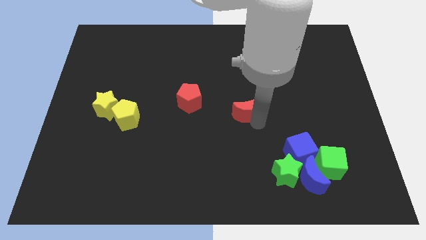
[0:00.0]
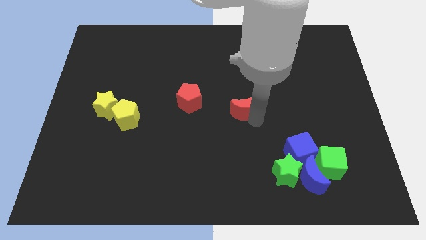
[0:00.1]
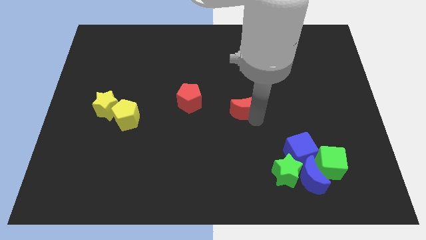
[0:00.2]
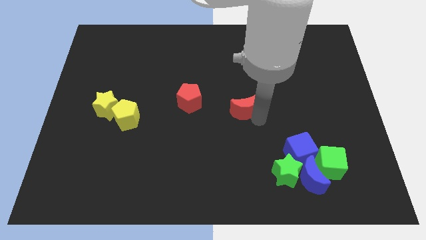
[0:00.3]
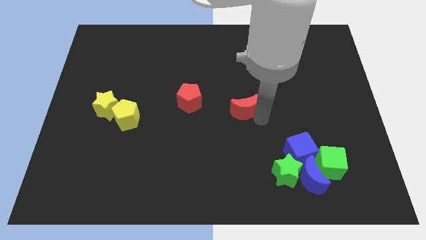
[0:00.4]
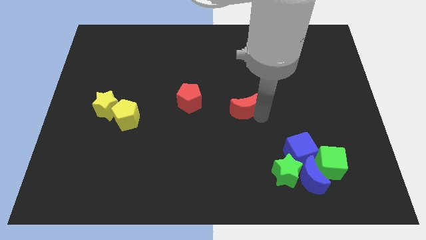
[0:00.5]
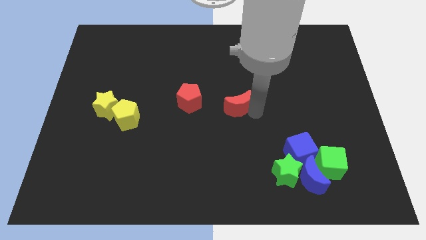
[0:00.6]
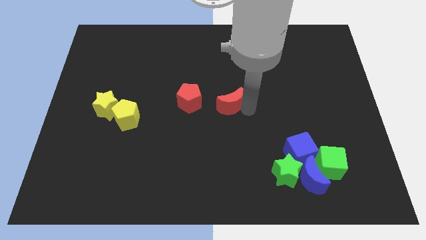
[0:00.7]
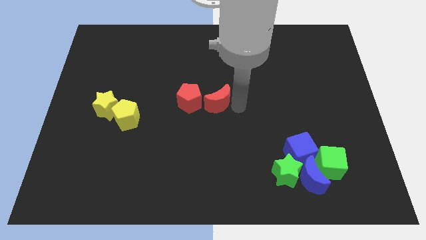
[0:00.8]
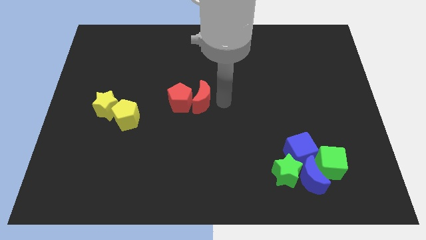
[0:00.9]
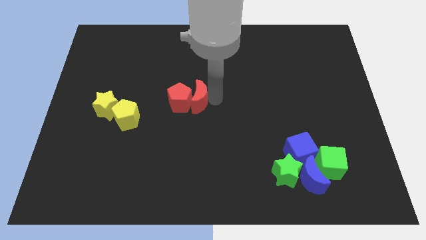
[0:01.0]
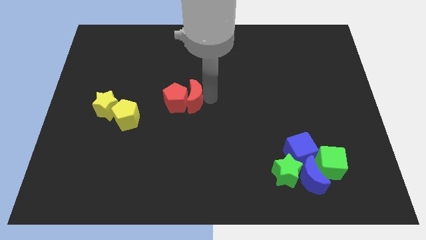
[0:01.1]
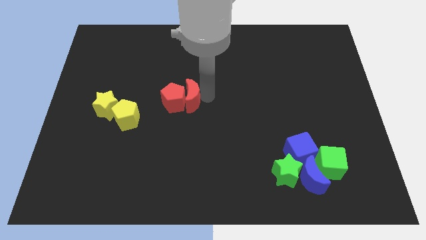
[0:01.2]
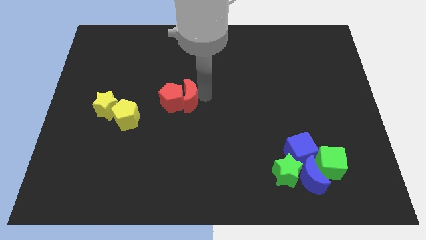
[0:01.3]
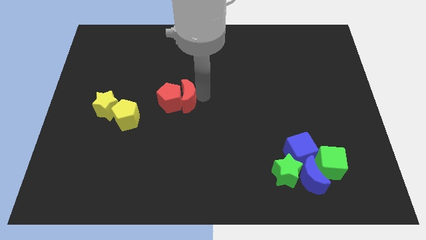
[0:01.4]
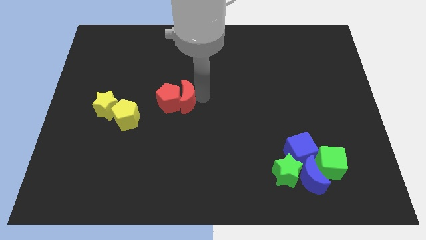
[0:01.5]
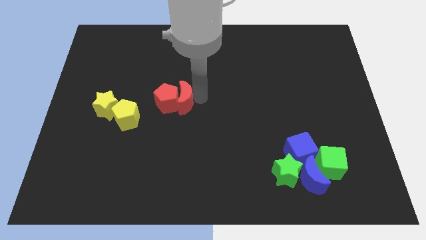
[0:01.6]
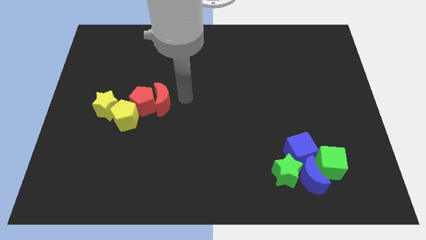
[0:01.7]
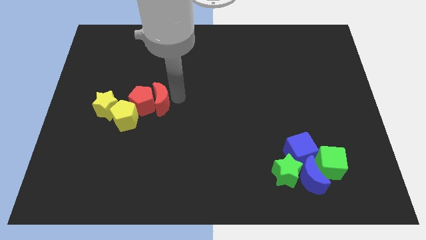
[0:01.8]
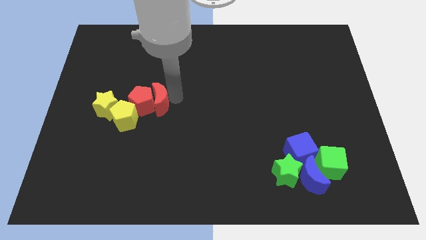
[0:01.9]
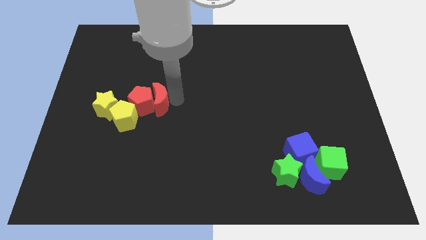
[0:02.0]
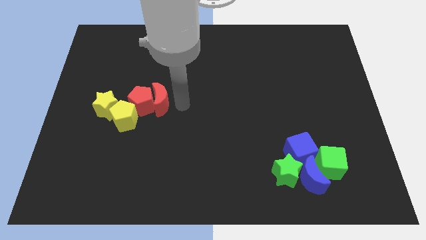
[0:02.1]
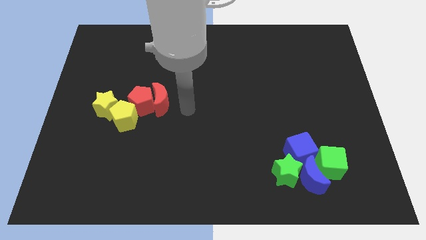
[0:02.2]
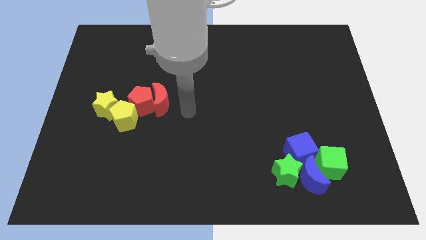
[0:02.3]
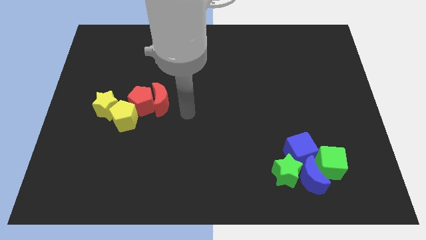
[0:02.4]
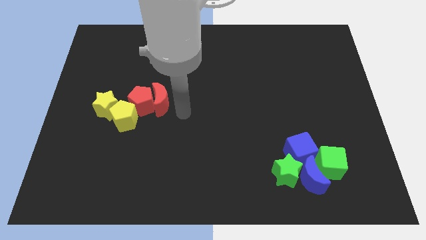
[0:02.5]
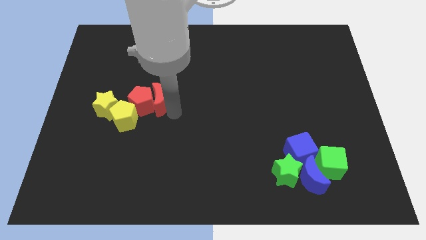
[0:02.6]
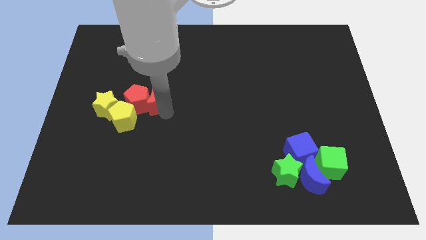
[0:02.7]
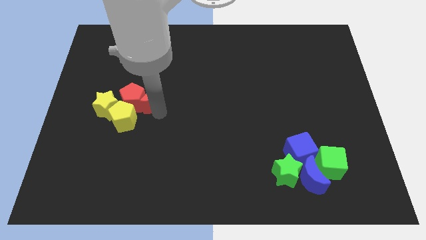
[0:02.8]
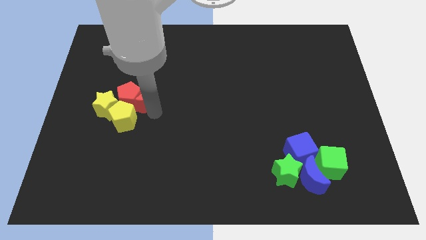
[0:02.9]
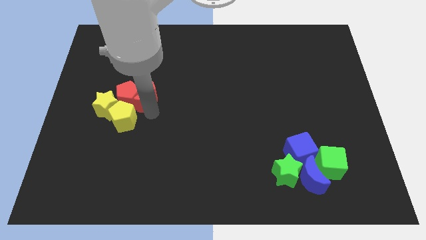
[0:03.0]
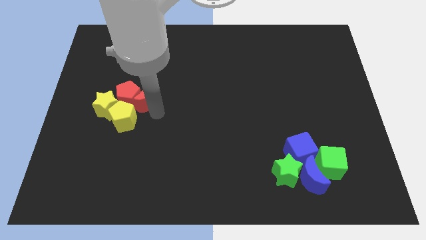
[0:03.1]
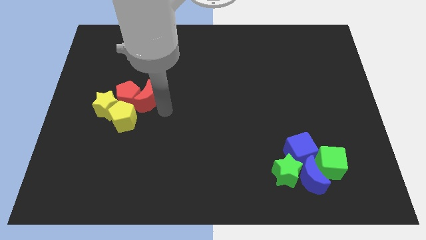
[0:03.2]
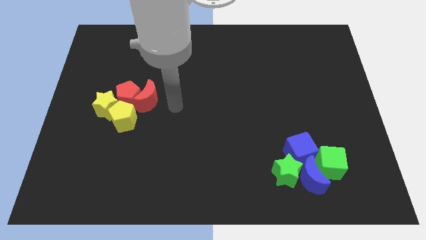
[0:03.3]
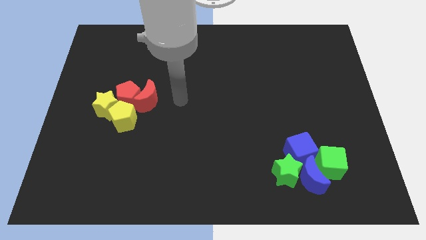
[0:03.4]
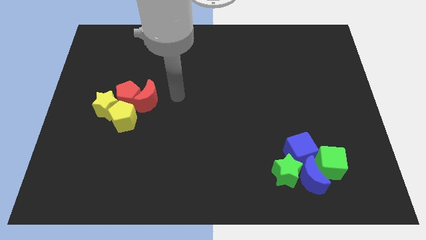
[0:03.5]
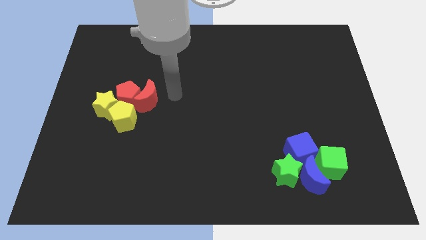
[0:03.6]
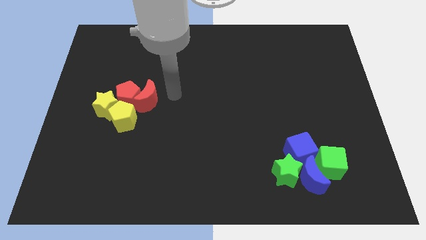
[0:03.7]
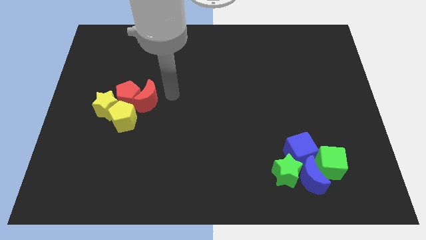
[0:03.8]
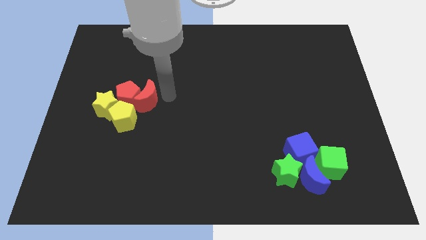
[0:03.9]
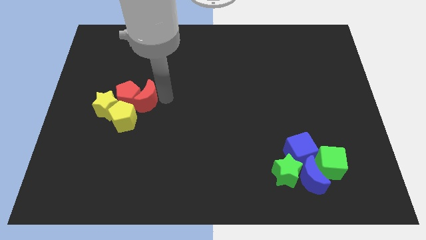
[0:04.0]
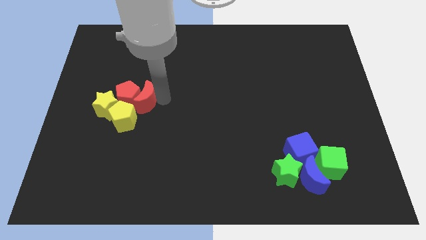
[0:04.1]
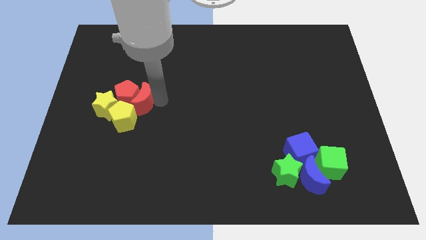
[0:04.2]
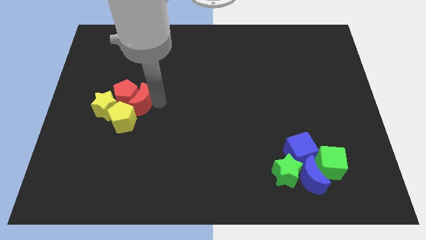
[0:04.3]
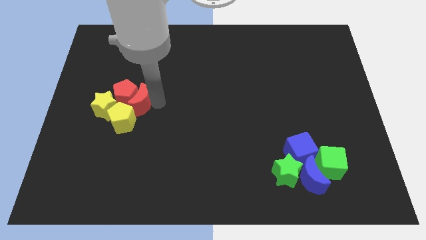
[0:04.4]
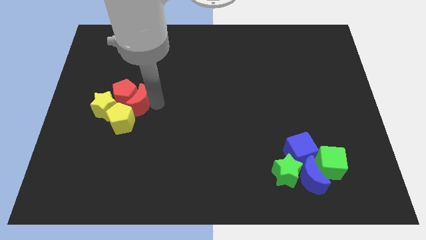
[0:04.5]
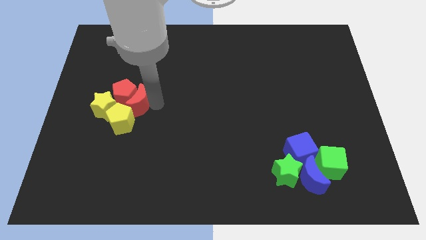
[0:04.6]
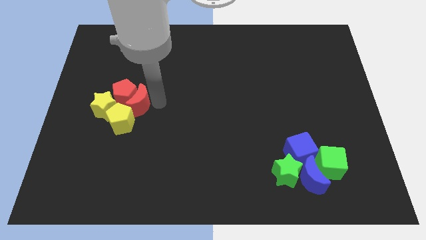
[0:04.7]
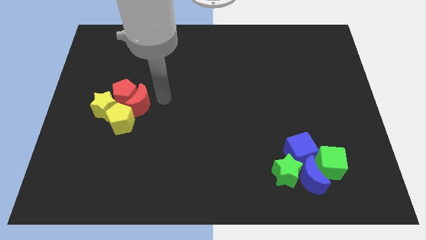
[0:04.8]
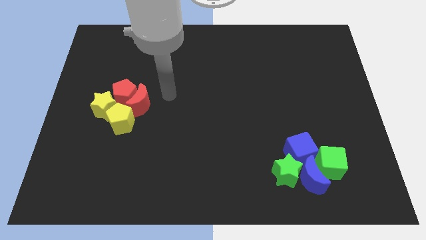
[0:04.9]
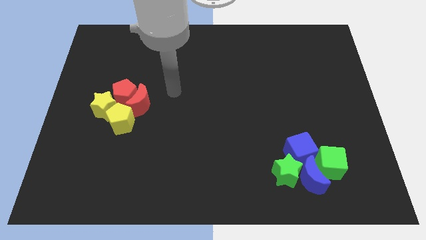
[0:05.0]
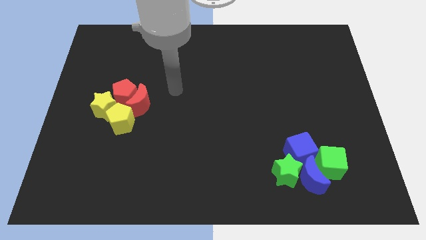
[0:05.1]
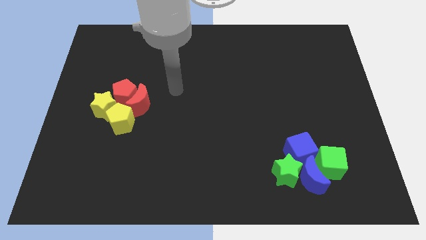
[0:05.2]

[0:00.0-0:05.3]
make a group of yellow and red blocks

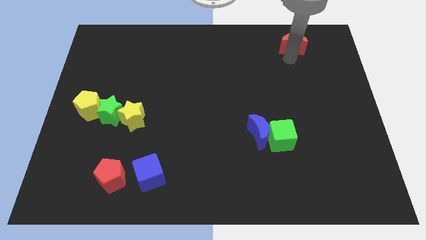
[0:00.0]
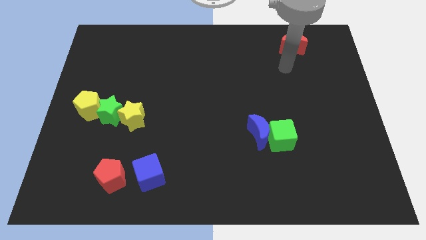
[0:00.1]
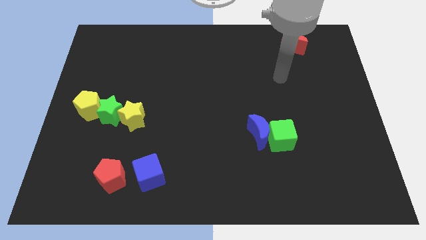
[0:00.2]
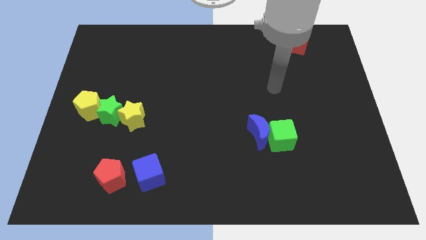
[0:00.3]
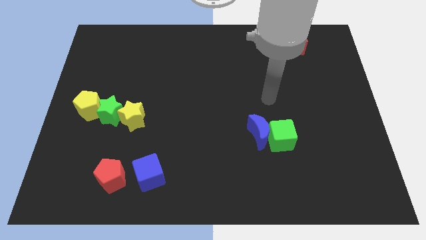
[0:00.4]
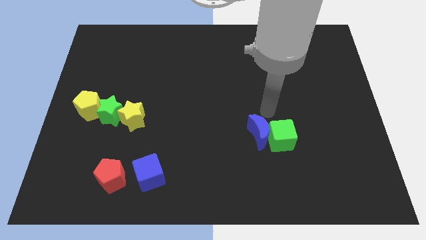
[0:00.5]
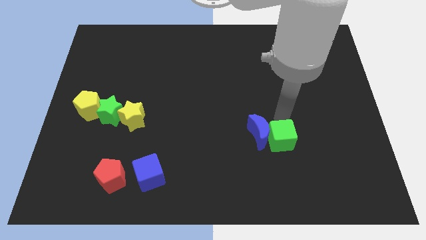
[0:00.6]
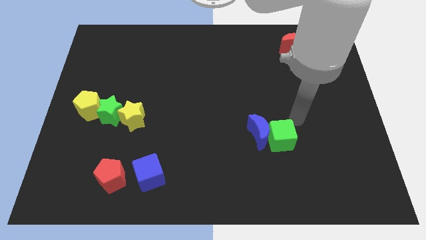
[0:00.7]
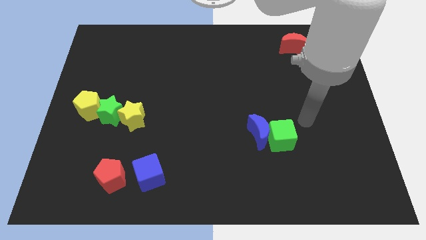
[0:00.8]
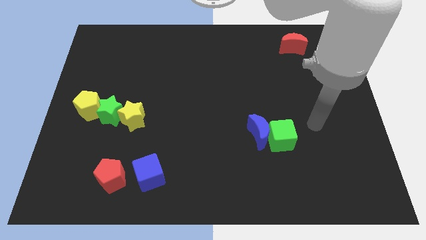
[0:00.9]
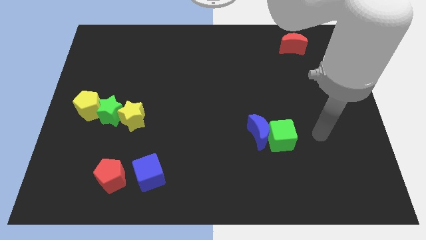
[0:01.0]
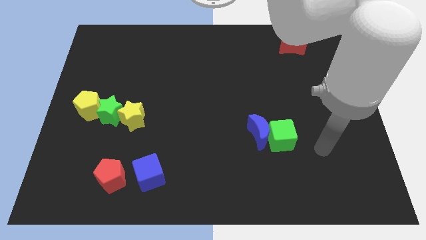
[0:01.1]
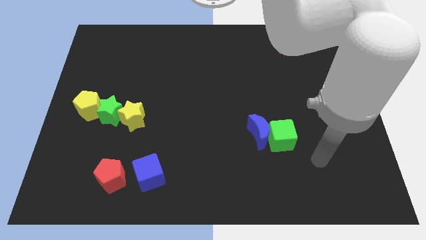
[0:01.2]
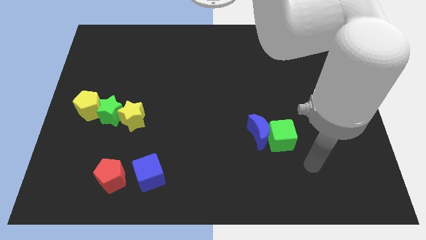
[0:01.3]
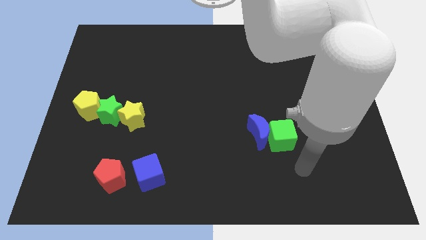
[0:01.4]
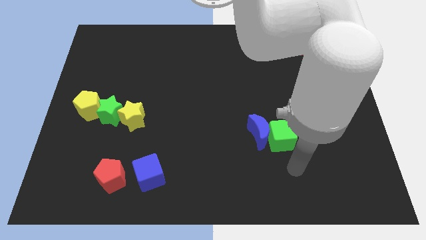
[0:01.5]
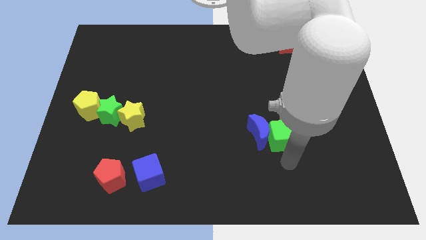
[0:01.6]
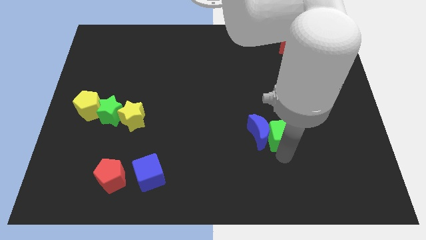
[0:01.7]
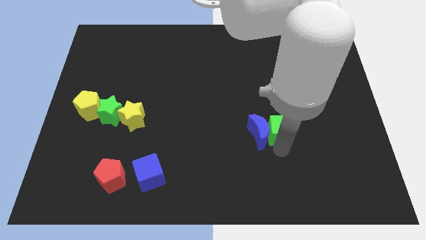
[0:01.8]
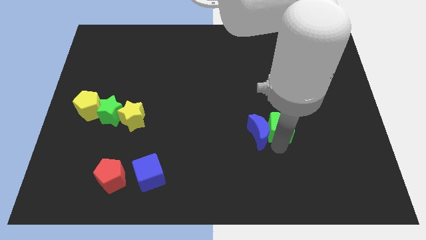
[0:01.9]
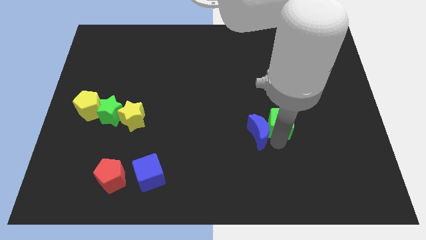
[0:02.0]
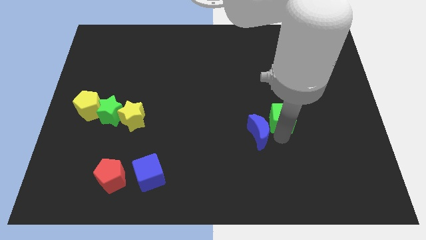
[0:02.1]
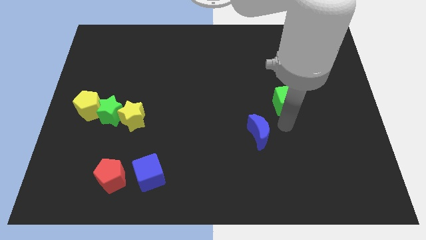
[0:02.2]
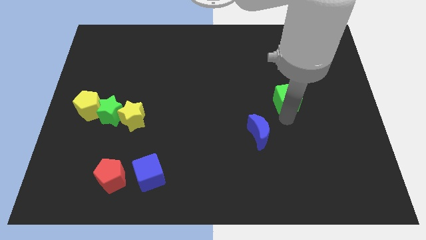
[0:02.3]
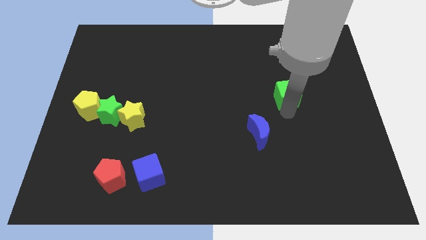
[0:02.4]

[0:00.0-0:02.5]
push the green cube to the top right of the blue crescent

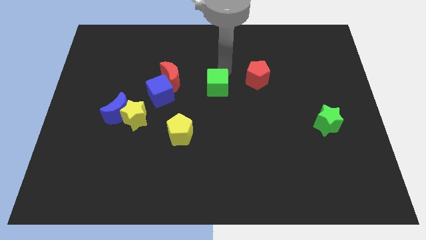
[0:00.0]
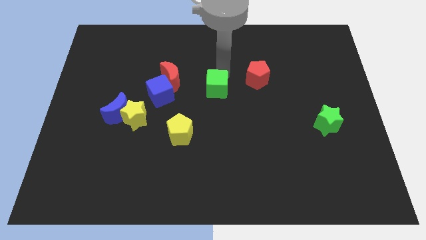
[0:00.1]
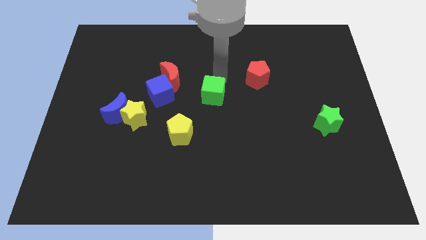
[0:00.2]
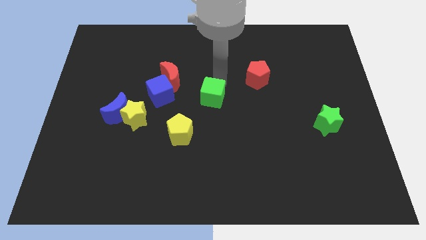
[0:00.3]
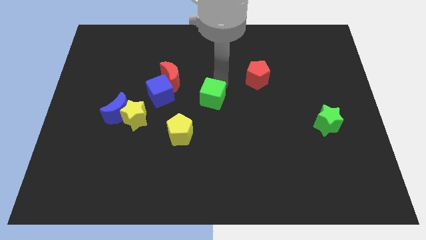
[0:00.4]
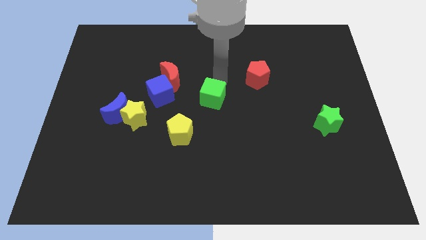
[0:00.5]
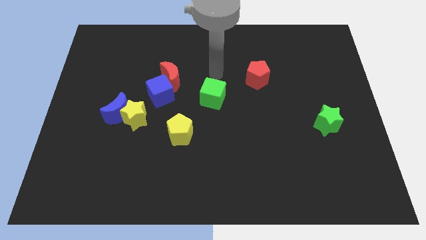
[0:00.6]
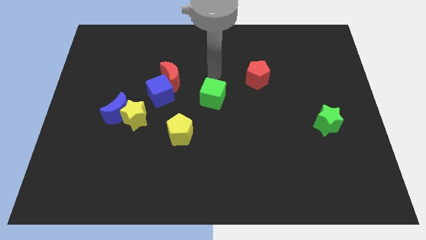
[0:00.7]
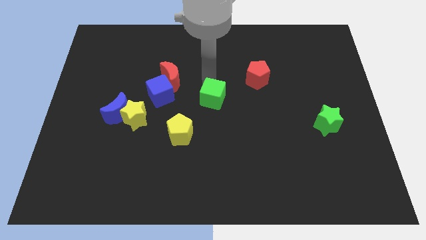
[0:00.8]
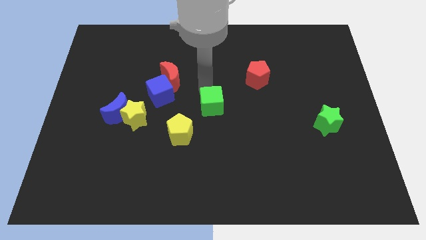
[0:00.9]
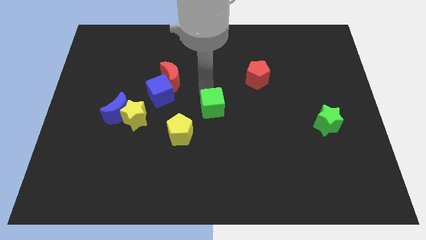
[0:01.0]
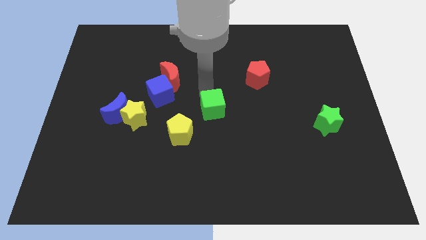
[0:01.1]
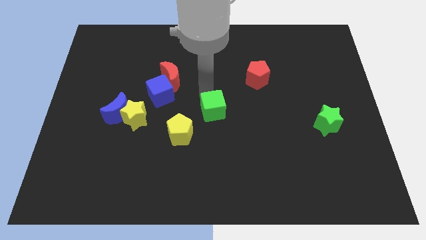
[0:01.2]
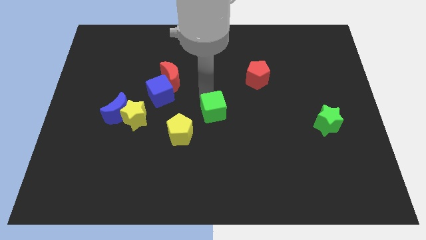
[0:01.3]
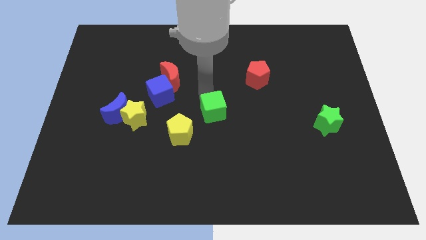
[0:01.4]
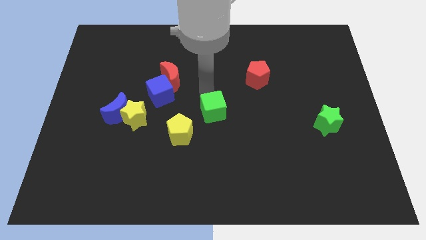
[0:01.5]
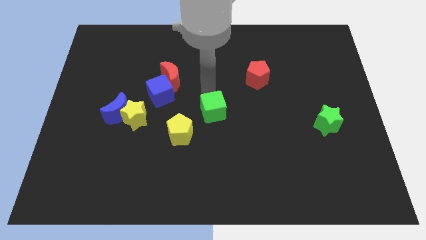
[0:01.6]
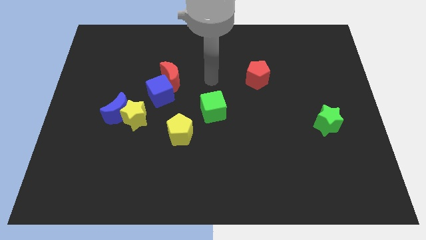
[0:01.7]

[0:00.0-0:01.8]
move the green cube to the top right of the yellow pentagon
